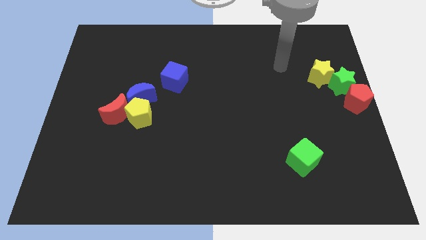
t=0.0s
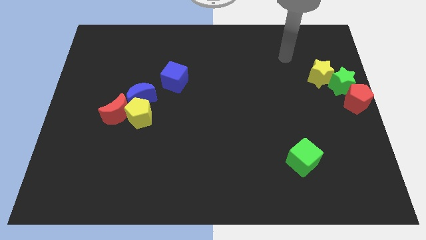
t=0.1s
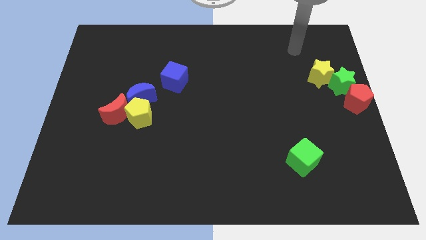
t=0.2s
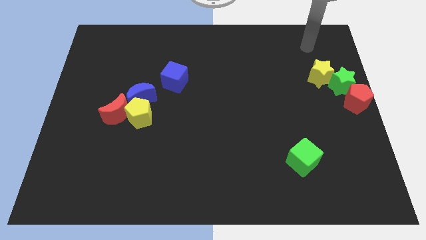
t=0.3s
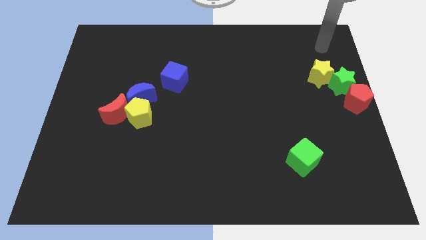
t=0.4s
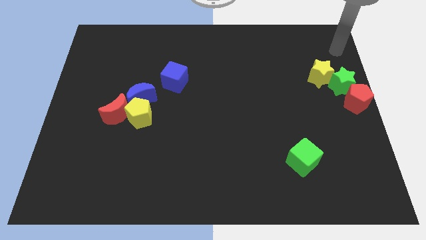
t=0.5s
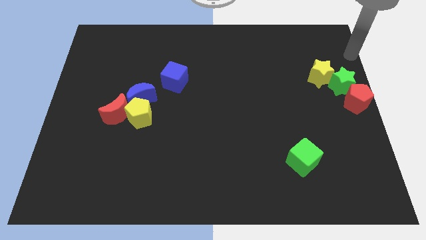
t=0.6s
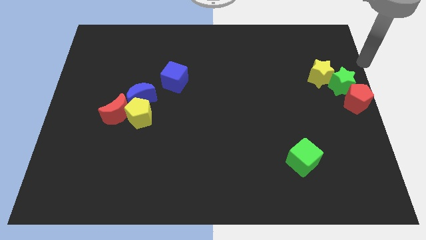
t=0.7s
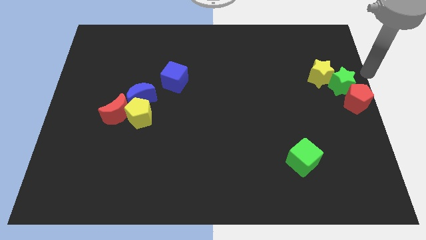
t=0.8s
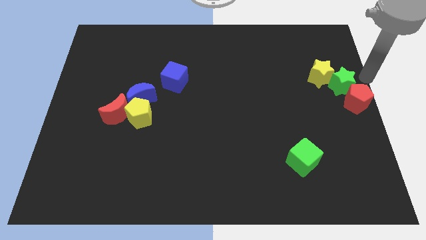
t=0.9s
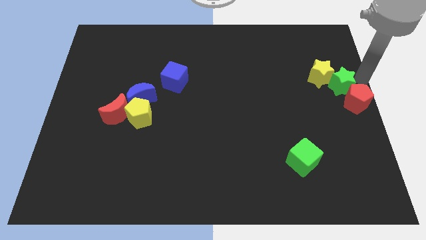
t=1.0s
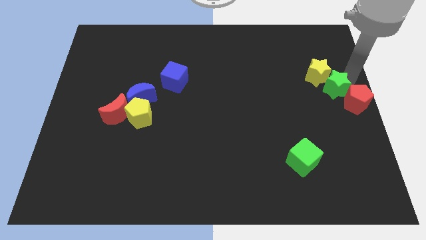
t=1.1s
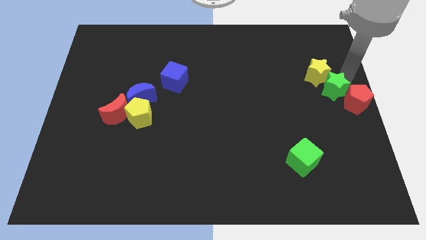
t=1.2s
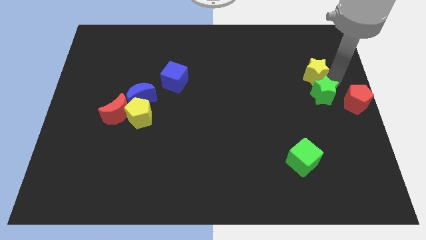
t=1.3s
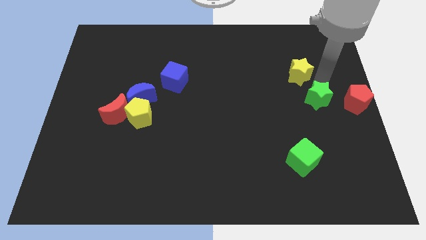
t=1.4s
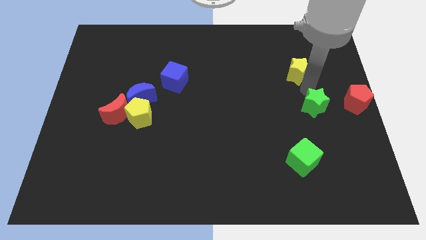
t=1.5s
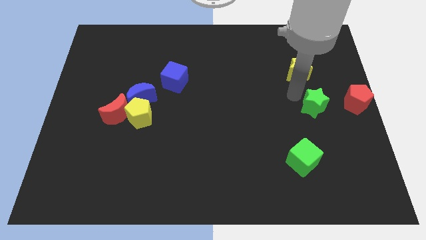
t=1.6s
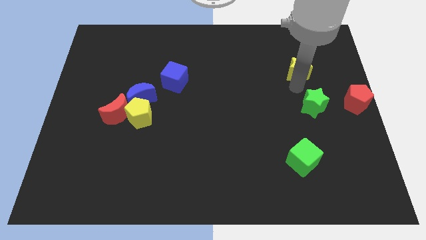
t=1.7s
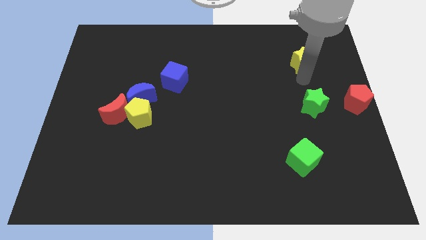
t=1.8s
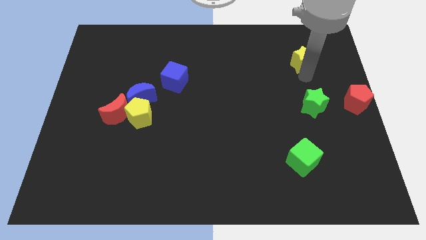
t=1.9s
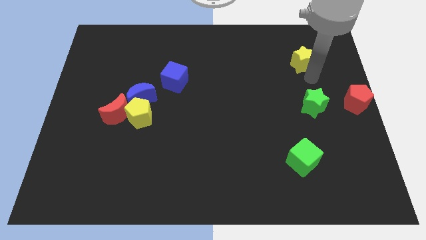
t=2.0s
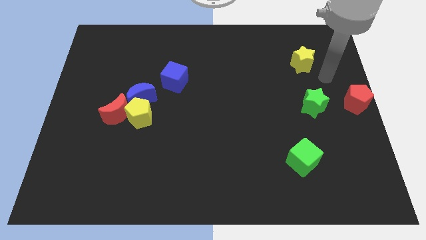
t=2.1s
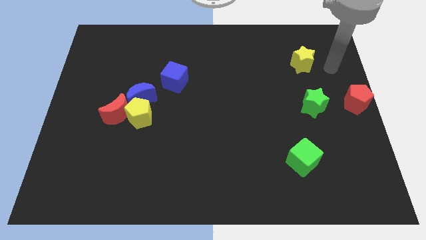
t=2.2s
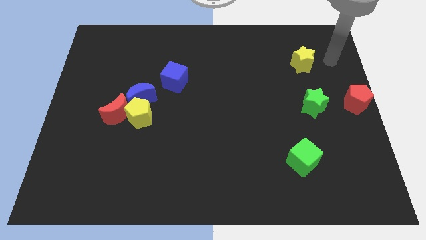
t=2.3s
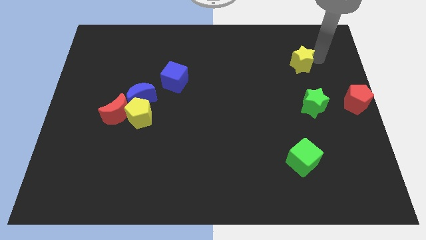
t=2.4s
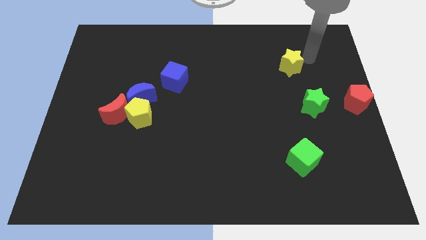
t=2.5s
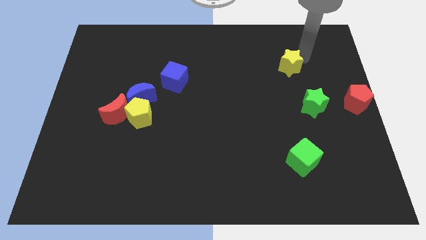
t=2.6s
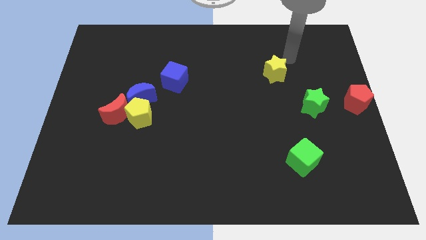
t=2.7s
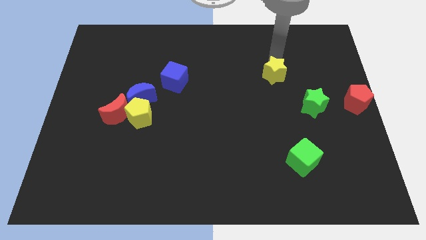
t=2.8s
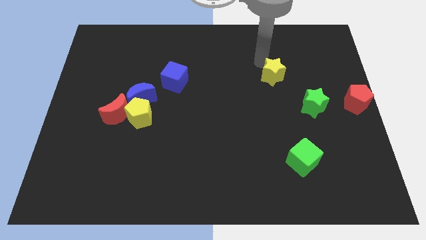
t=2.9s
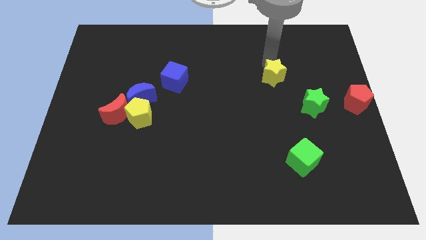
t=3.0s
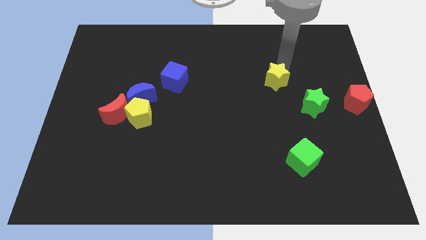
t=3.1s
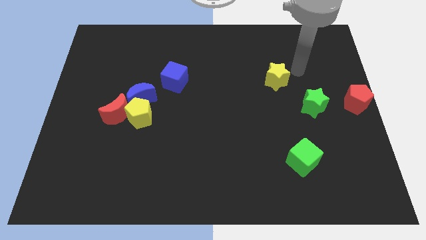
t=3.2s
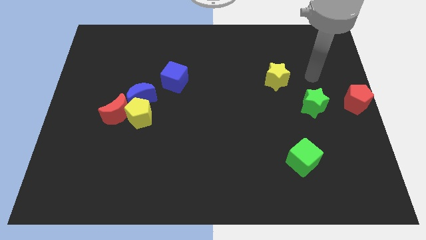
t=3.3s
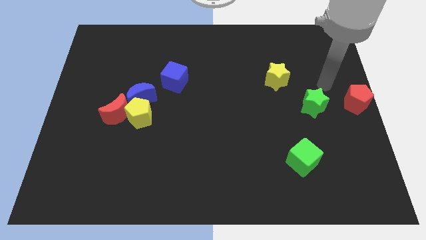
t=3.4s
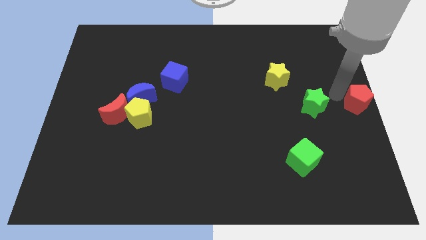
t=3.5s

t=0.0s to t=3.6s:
move the yellow star diagonally on the top left side of the green star

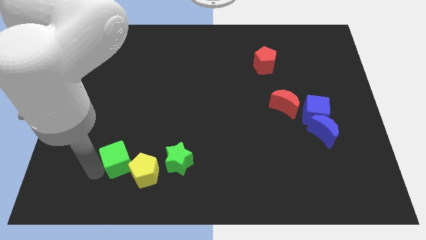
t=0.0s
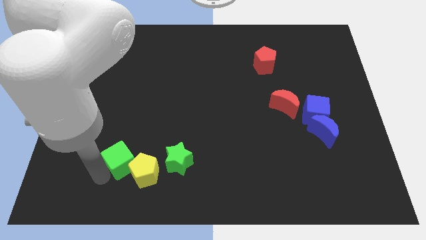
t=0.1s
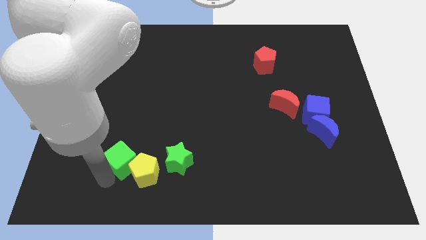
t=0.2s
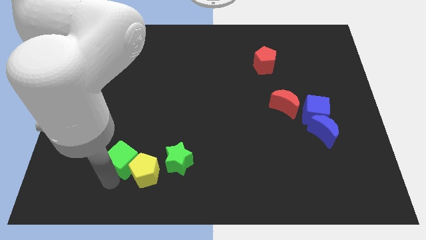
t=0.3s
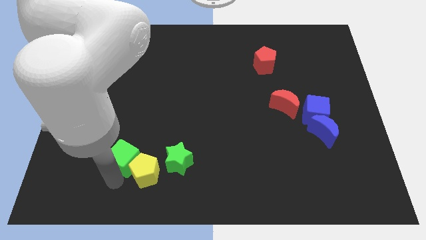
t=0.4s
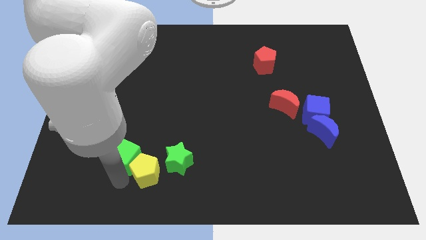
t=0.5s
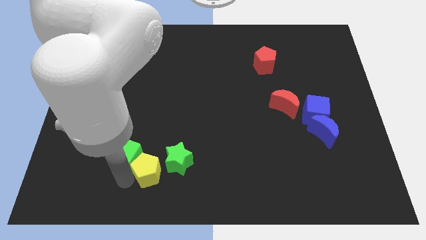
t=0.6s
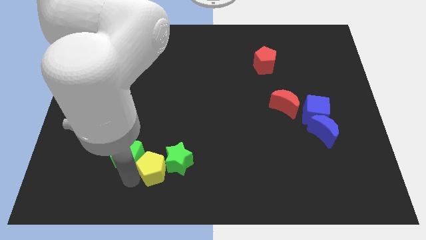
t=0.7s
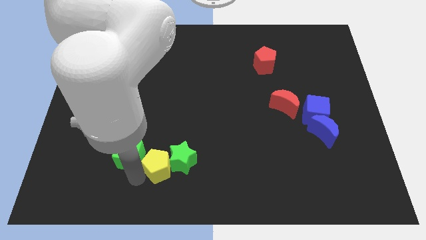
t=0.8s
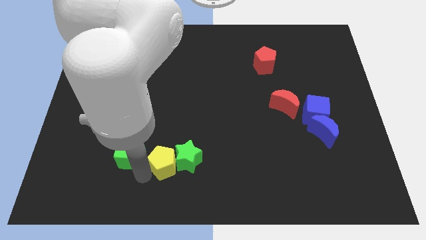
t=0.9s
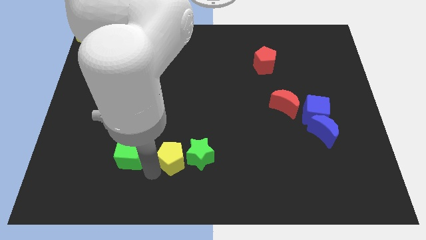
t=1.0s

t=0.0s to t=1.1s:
separate the yellow pentagon from the green cube

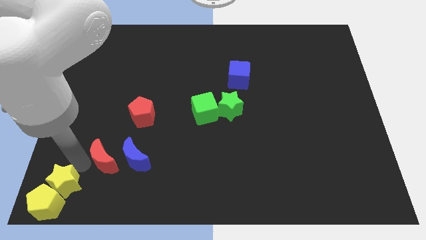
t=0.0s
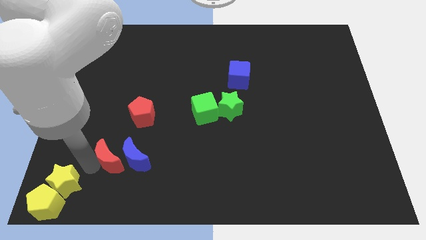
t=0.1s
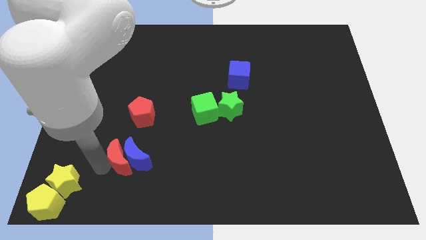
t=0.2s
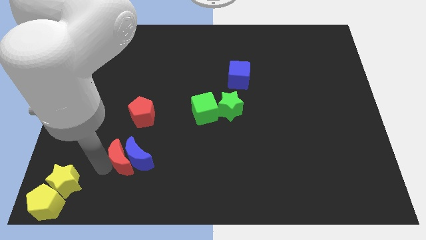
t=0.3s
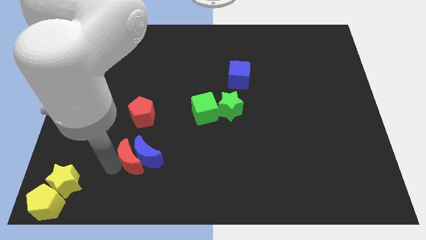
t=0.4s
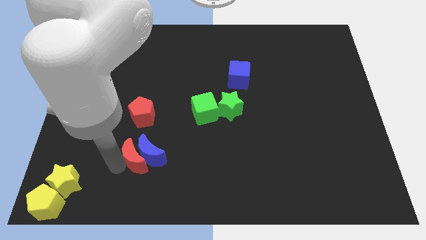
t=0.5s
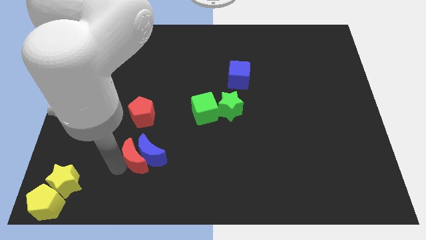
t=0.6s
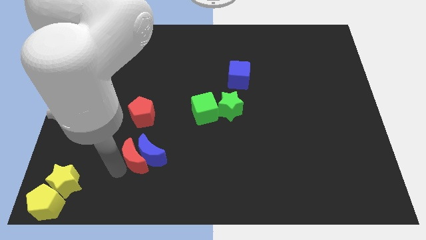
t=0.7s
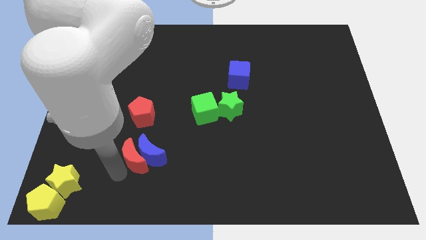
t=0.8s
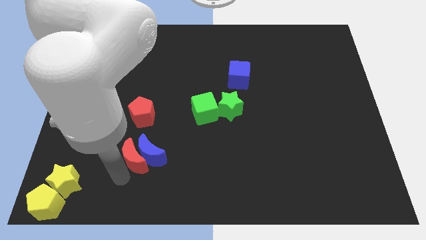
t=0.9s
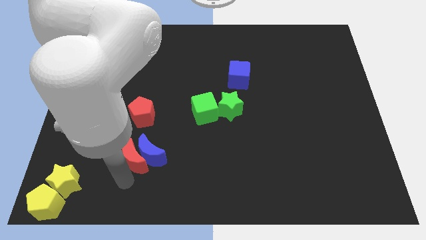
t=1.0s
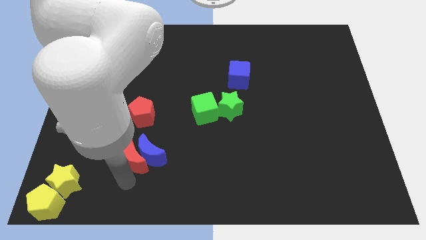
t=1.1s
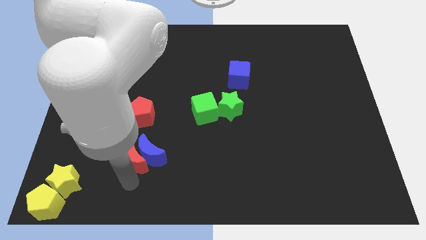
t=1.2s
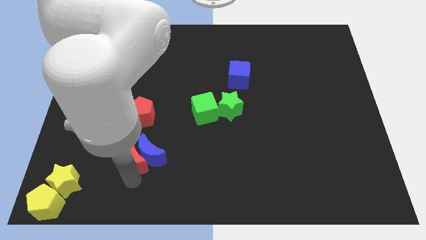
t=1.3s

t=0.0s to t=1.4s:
push the red crescent into the blue crescent

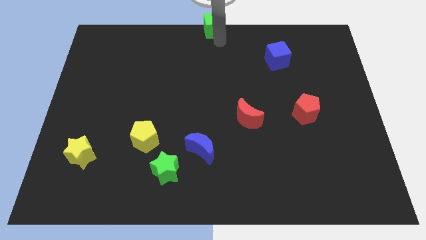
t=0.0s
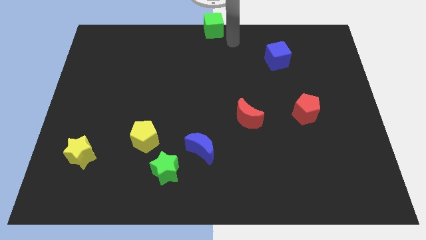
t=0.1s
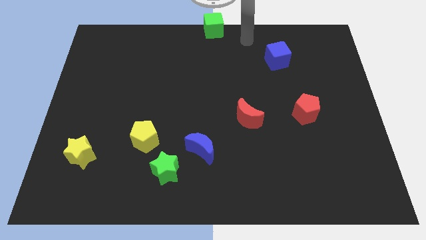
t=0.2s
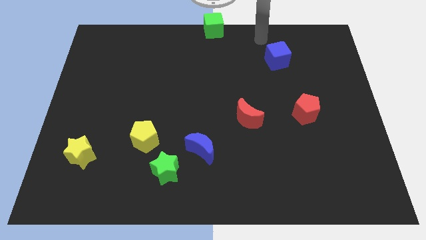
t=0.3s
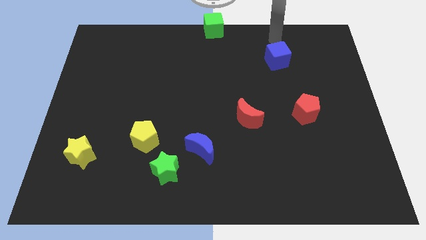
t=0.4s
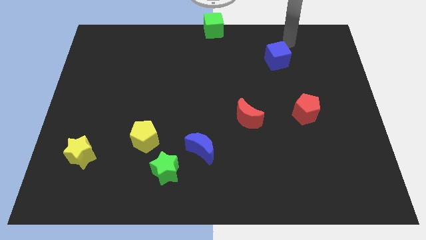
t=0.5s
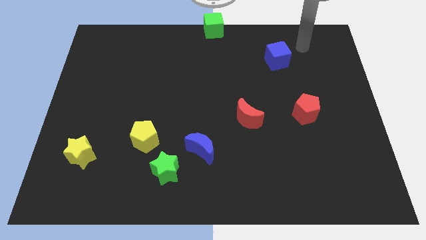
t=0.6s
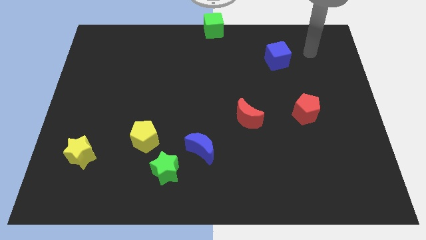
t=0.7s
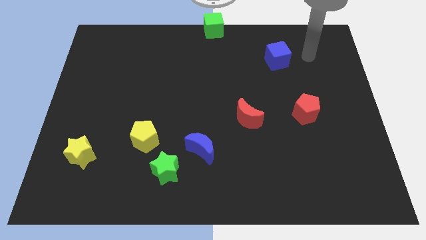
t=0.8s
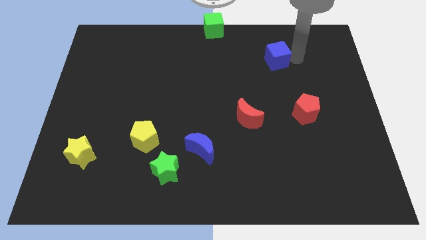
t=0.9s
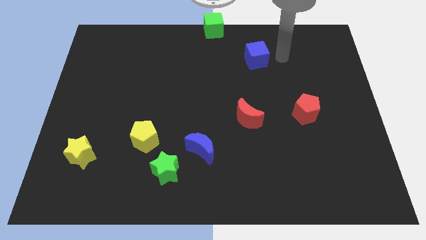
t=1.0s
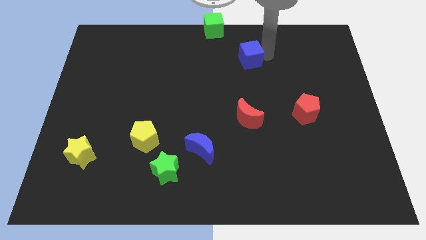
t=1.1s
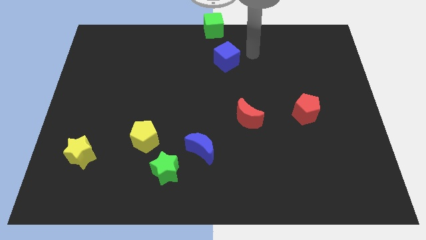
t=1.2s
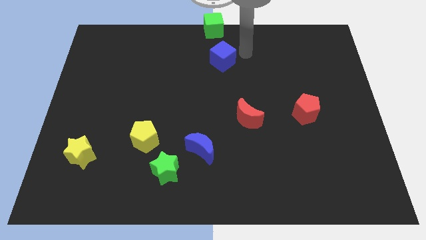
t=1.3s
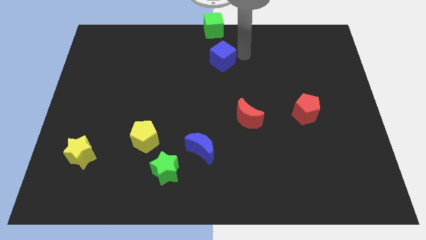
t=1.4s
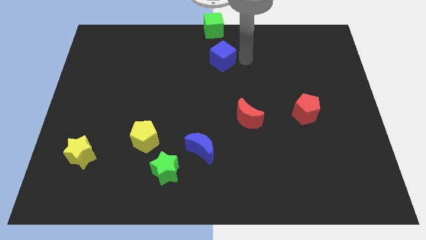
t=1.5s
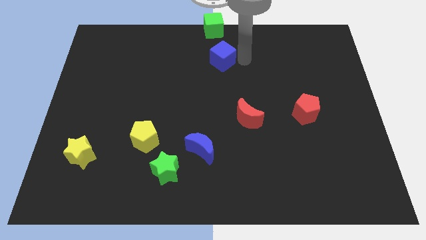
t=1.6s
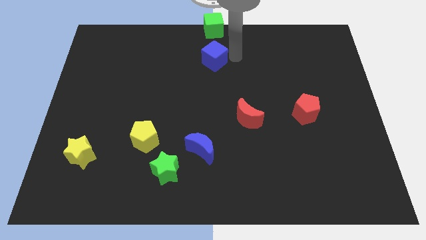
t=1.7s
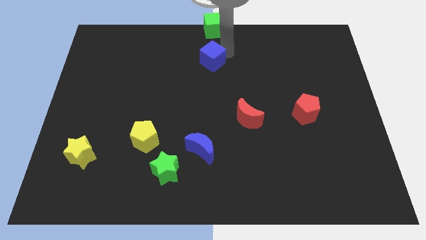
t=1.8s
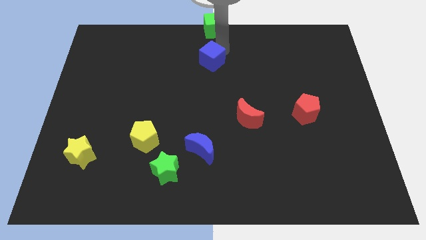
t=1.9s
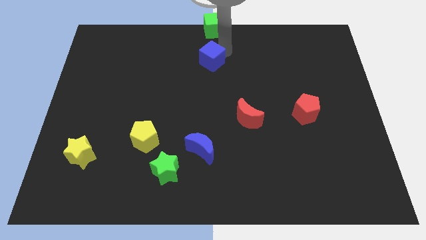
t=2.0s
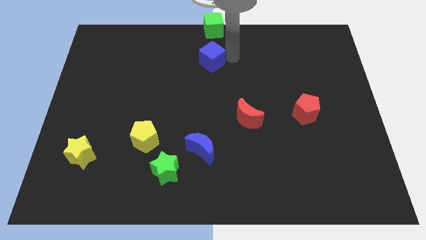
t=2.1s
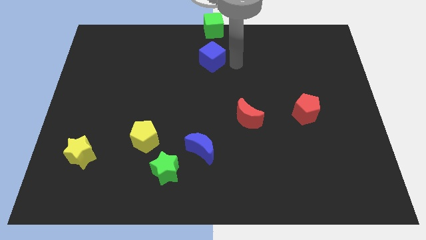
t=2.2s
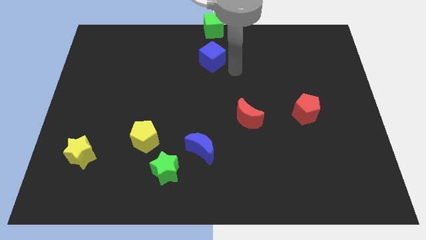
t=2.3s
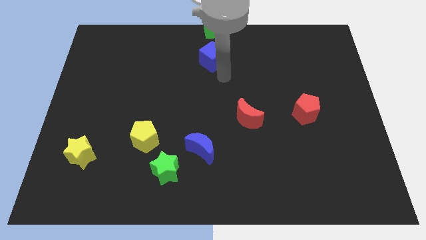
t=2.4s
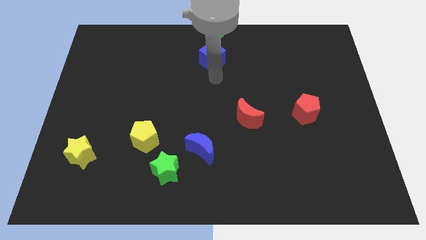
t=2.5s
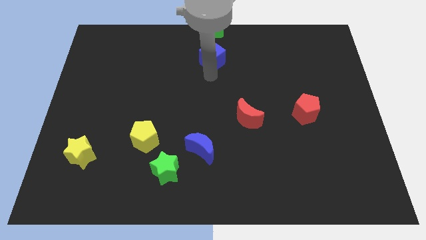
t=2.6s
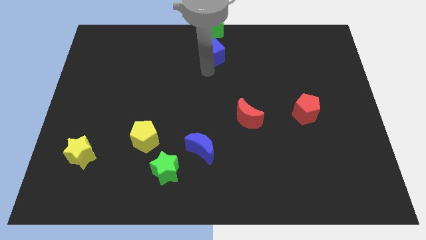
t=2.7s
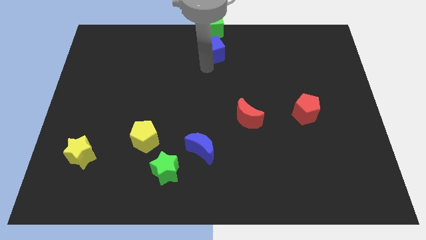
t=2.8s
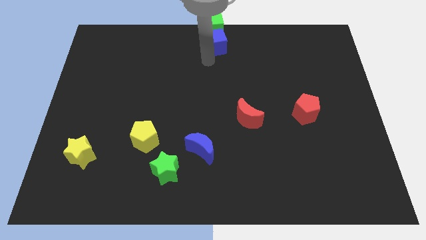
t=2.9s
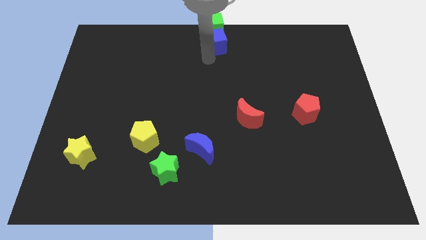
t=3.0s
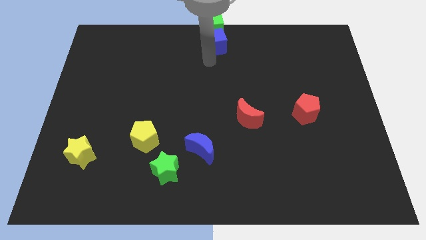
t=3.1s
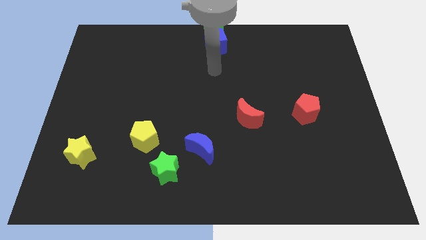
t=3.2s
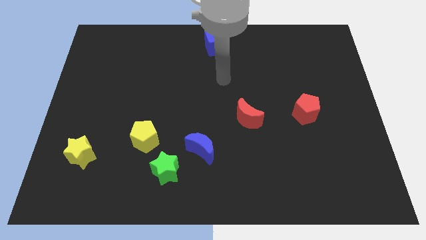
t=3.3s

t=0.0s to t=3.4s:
move blue cube into green cube
